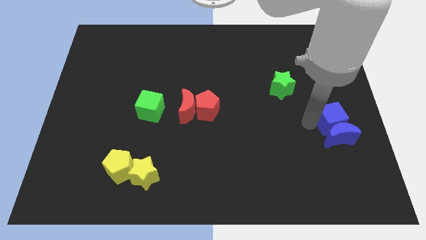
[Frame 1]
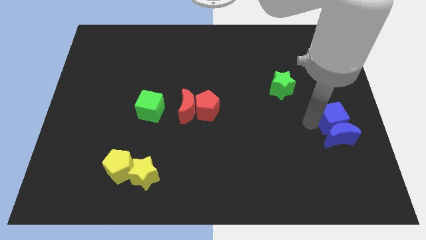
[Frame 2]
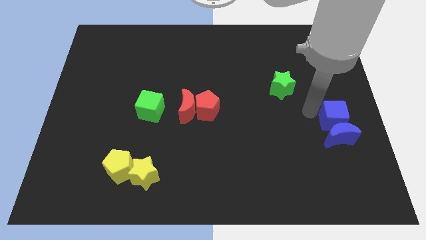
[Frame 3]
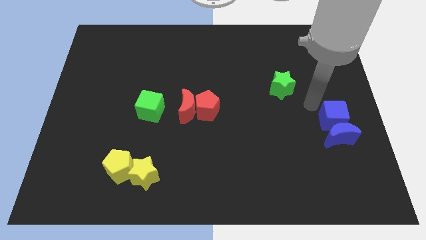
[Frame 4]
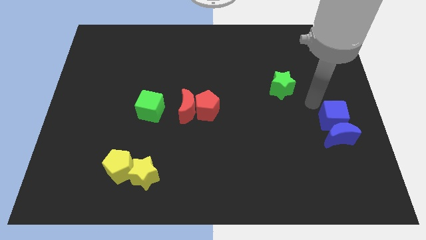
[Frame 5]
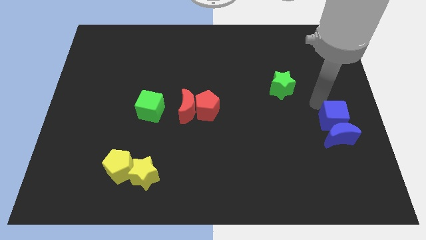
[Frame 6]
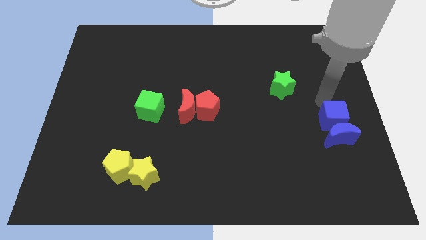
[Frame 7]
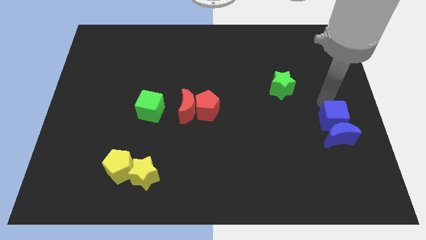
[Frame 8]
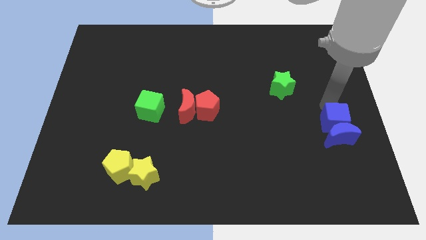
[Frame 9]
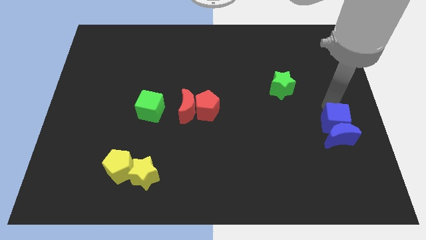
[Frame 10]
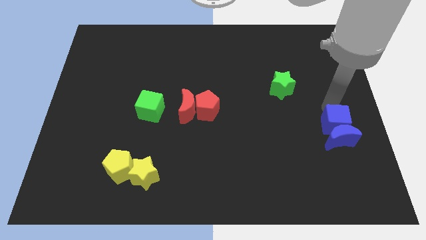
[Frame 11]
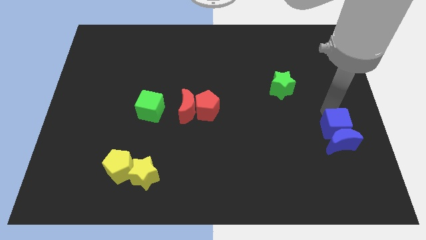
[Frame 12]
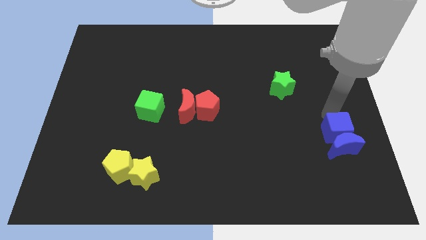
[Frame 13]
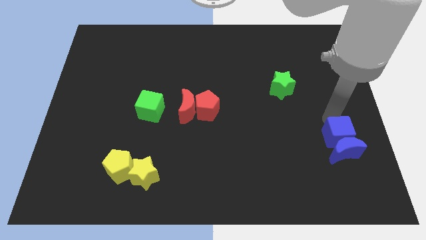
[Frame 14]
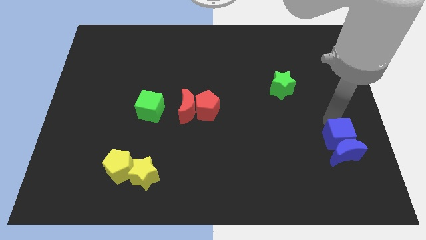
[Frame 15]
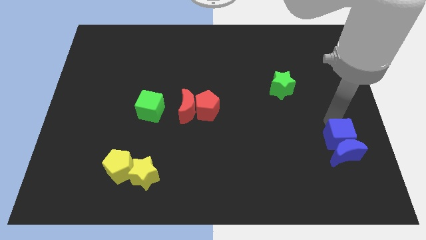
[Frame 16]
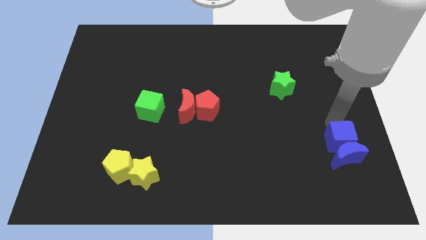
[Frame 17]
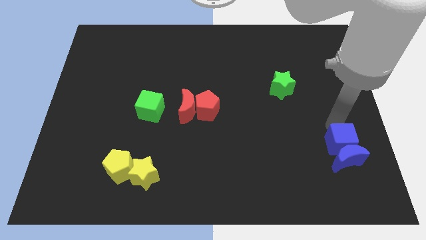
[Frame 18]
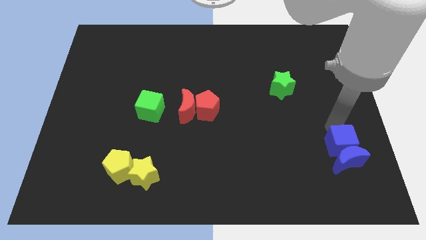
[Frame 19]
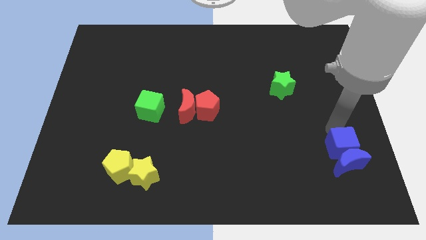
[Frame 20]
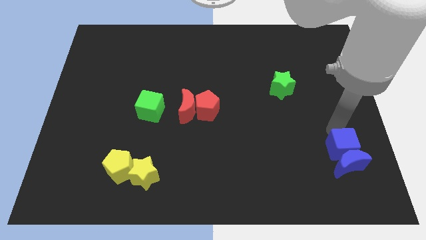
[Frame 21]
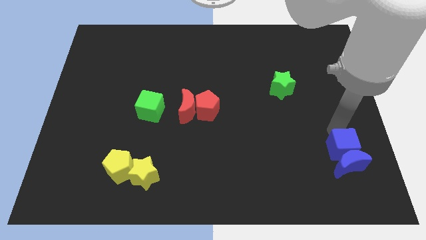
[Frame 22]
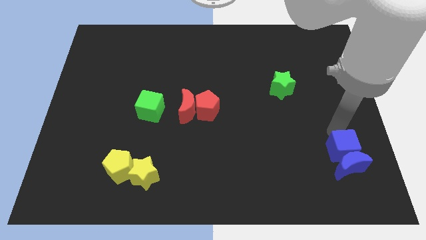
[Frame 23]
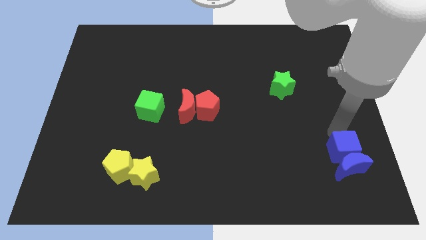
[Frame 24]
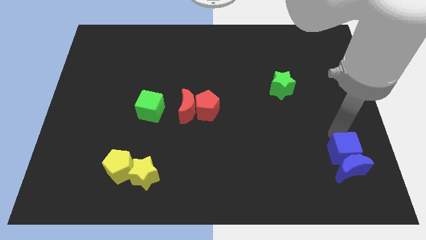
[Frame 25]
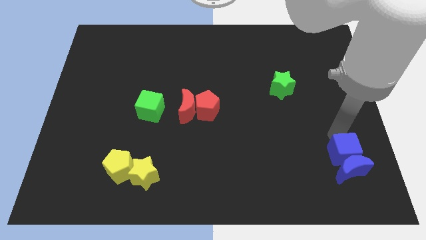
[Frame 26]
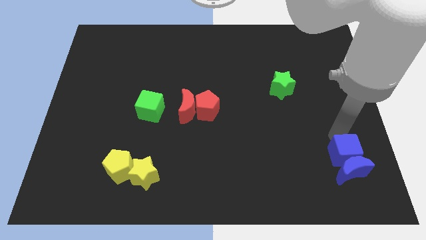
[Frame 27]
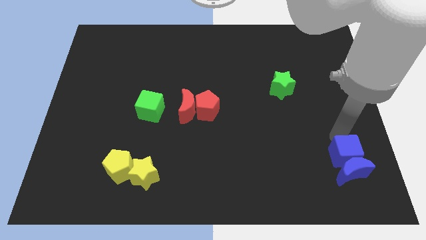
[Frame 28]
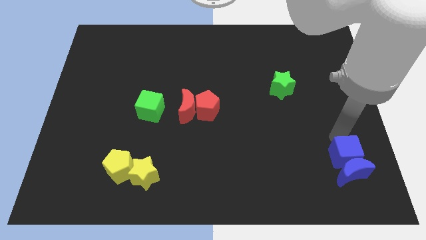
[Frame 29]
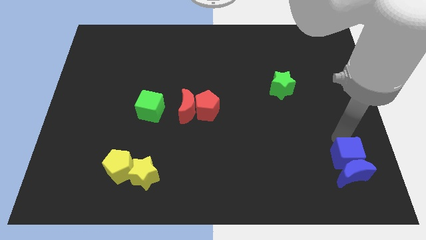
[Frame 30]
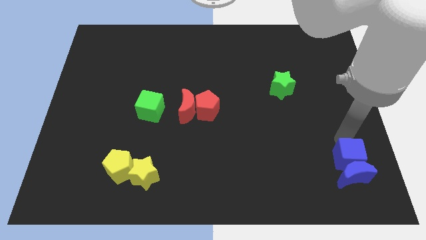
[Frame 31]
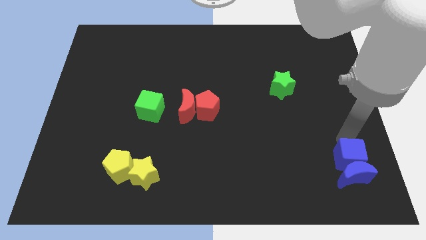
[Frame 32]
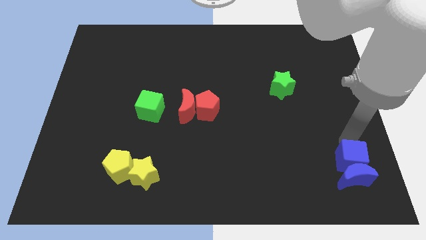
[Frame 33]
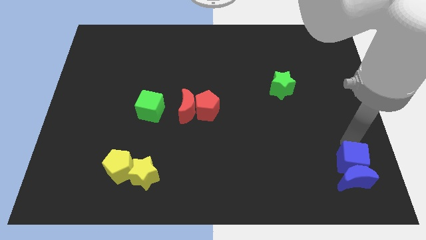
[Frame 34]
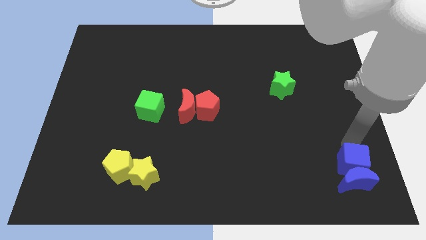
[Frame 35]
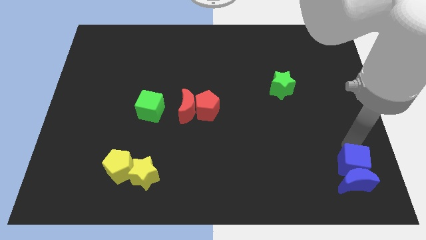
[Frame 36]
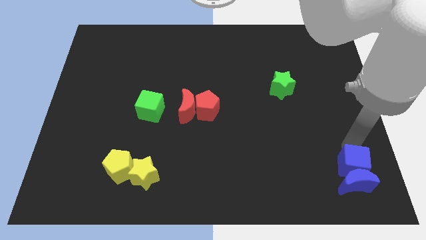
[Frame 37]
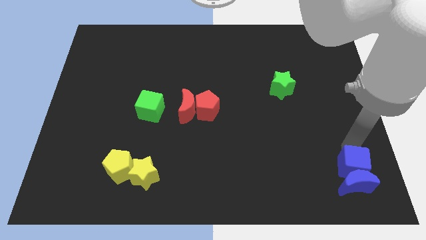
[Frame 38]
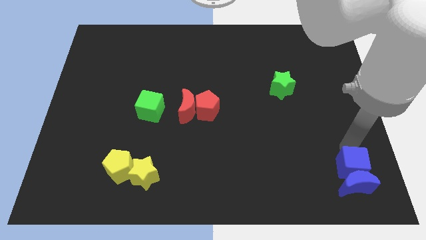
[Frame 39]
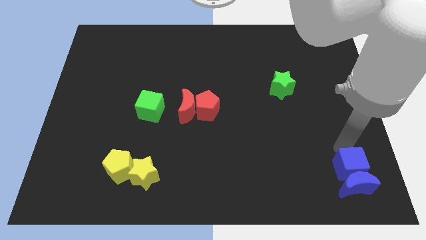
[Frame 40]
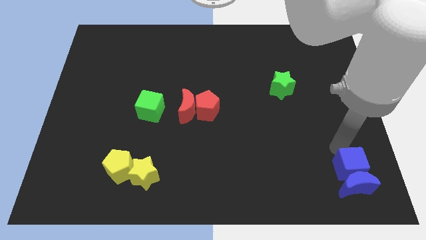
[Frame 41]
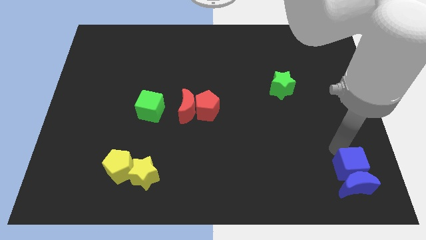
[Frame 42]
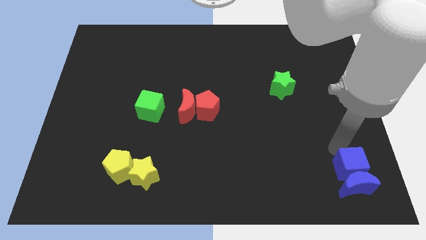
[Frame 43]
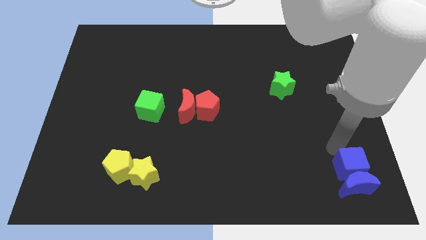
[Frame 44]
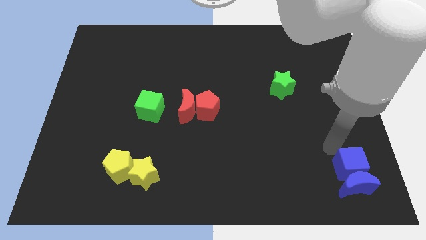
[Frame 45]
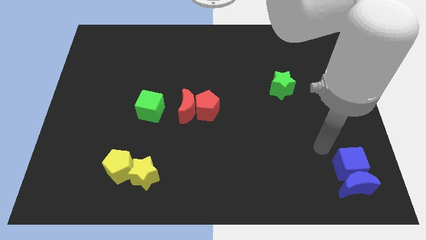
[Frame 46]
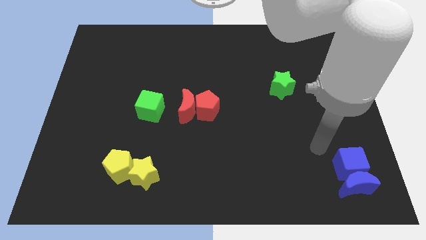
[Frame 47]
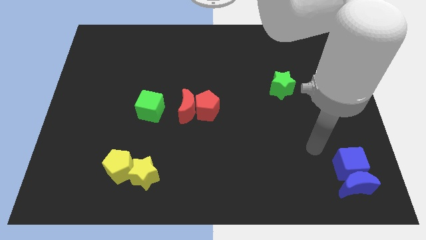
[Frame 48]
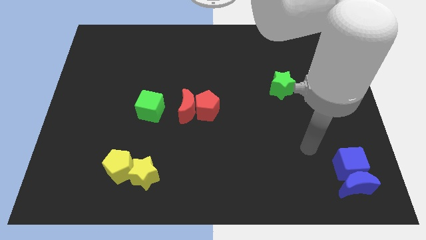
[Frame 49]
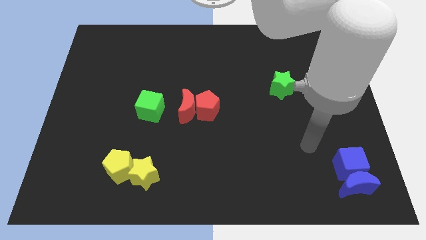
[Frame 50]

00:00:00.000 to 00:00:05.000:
move the blue blocks to the bottom right corner of the board

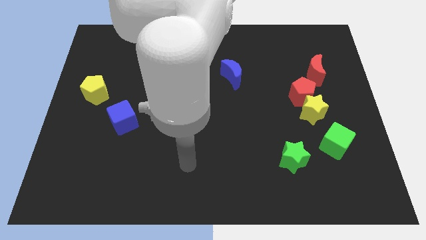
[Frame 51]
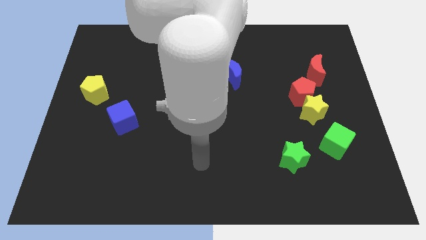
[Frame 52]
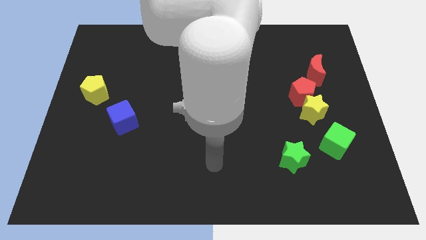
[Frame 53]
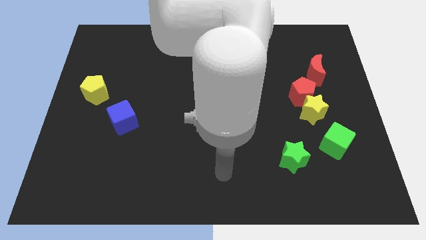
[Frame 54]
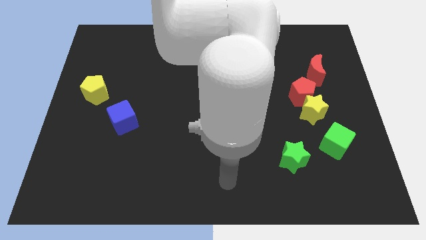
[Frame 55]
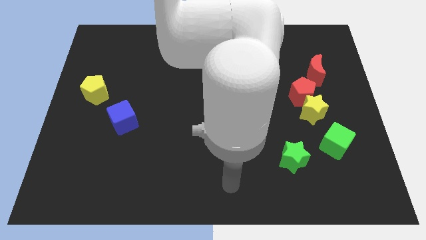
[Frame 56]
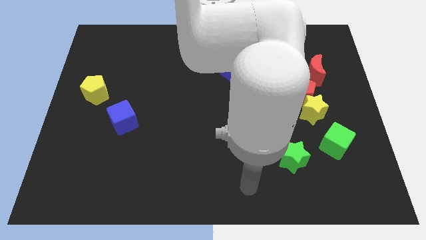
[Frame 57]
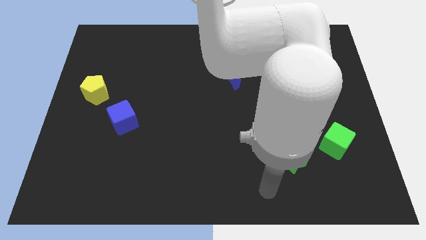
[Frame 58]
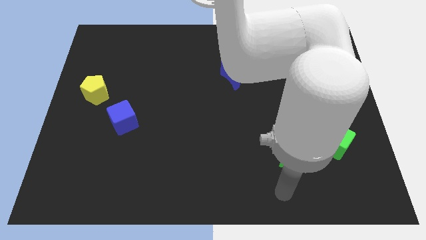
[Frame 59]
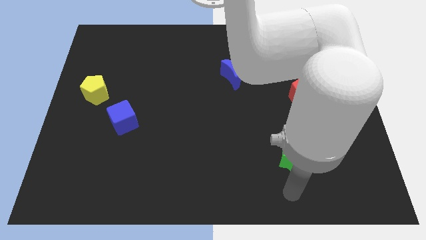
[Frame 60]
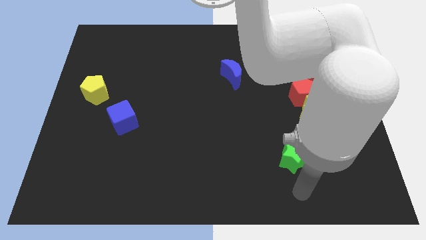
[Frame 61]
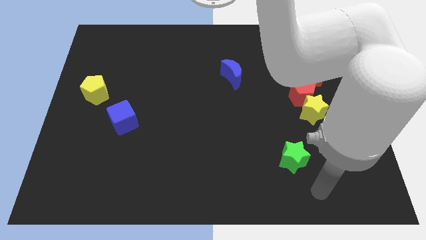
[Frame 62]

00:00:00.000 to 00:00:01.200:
place your arm at the bottom of the green star

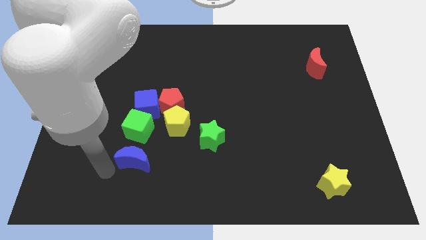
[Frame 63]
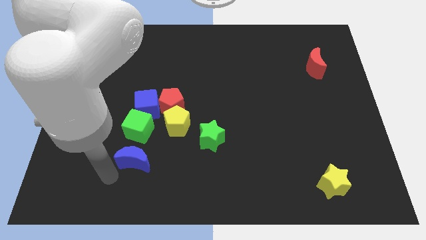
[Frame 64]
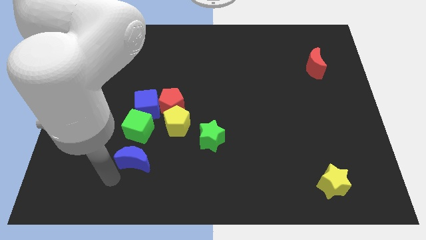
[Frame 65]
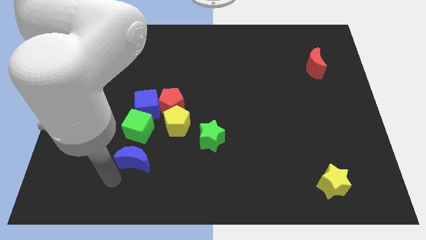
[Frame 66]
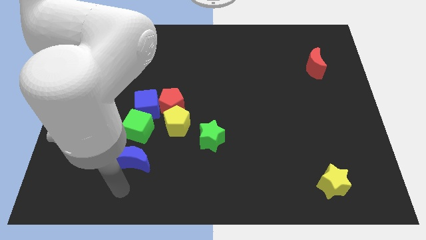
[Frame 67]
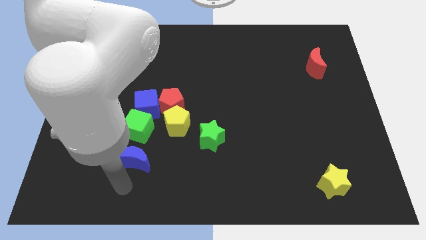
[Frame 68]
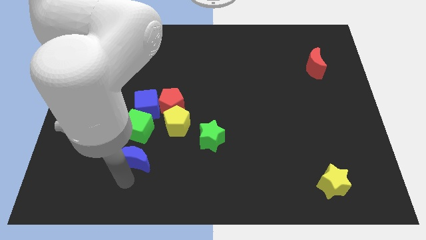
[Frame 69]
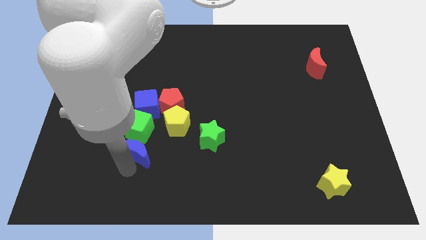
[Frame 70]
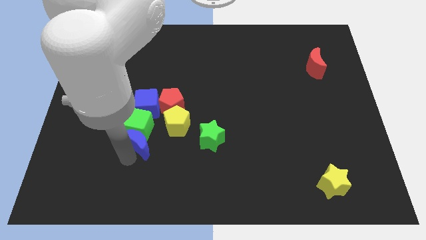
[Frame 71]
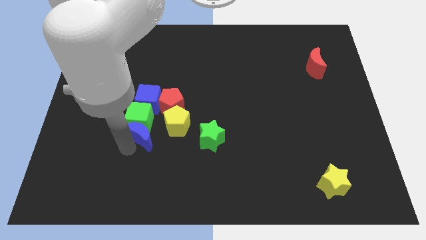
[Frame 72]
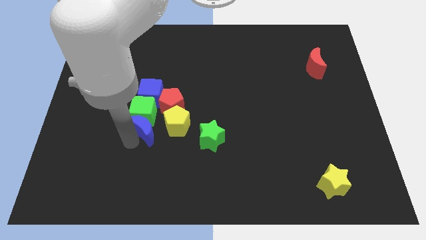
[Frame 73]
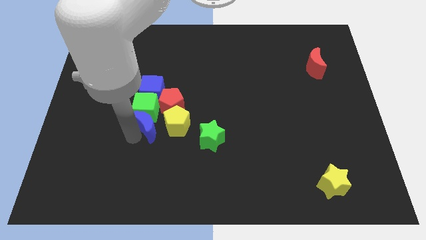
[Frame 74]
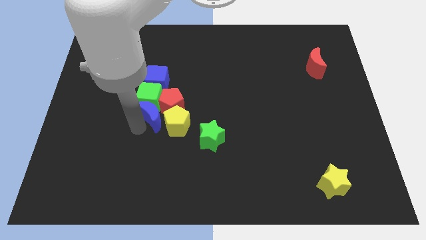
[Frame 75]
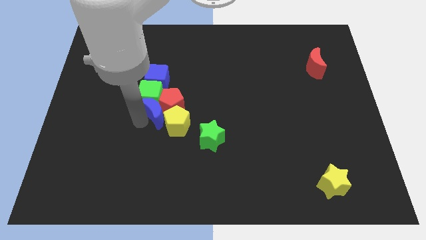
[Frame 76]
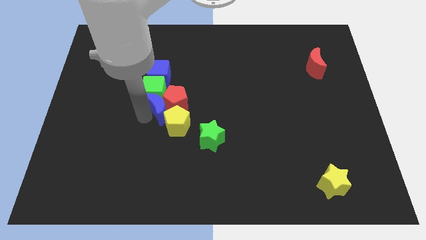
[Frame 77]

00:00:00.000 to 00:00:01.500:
push the blue moon green cube and blue cube towards top

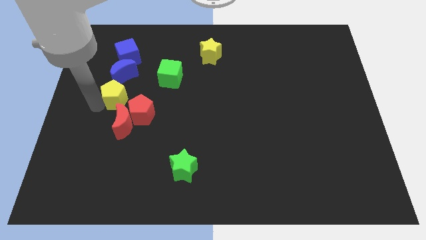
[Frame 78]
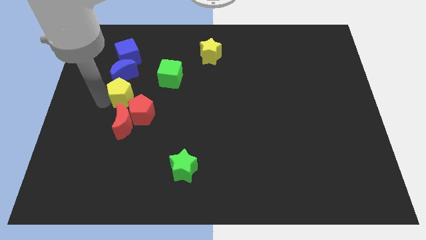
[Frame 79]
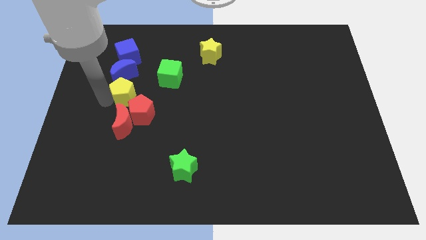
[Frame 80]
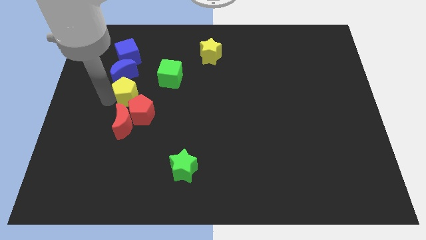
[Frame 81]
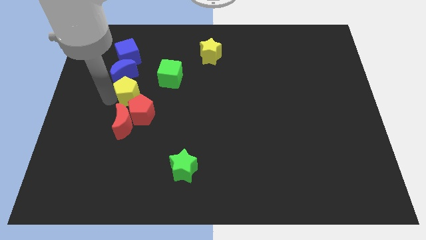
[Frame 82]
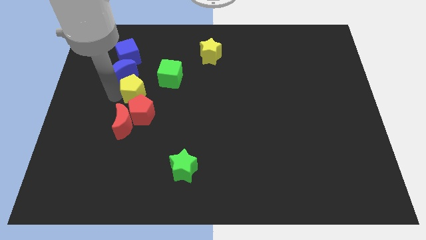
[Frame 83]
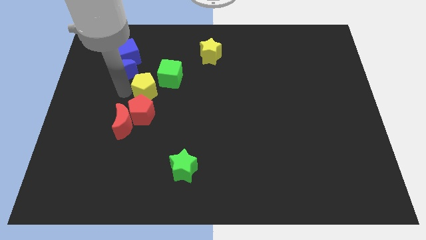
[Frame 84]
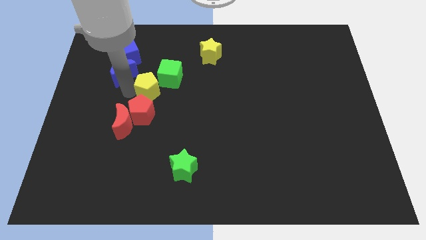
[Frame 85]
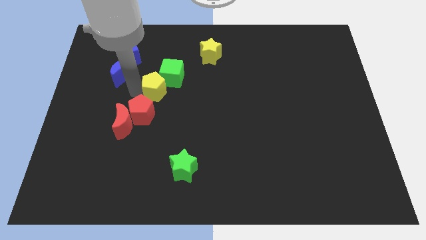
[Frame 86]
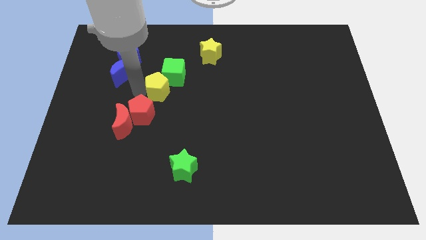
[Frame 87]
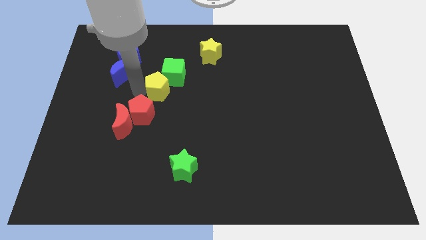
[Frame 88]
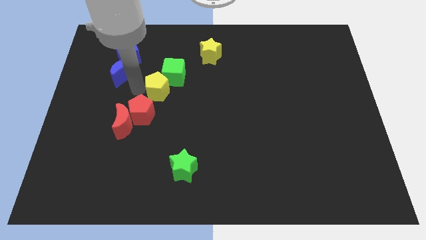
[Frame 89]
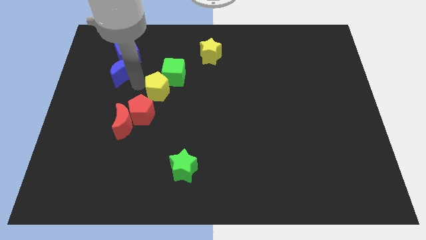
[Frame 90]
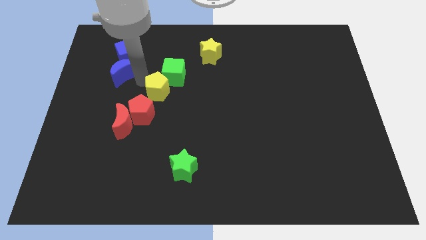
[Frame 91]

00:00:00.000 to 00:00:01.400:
move the yellow pentagon diagonally in between the green cube and red pentagon
